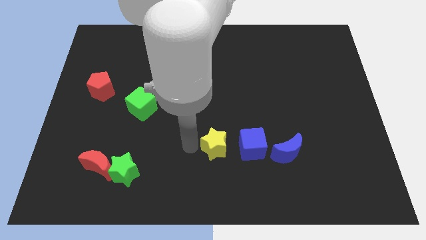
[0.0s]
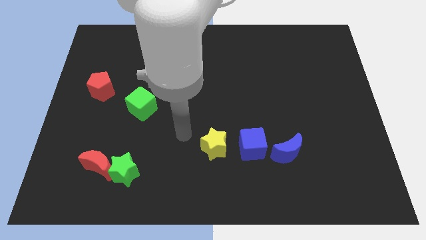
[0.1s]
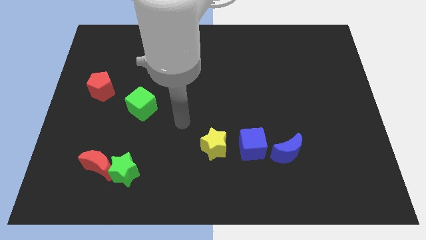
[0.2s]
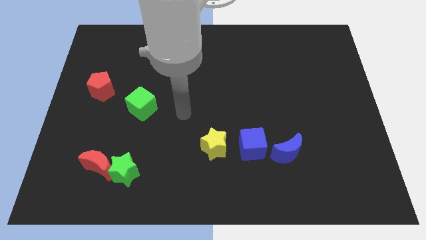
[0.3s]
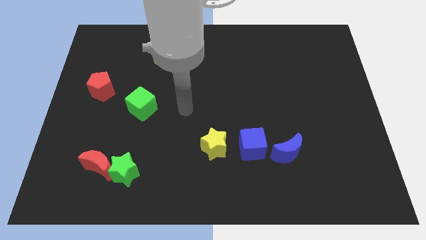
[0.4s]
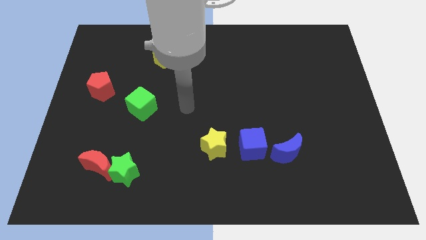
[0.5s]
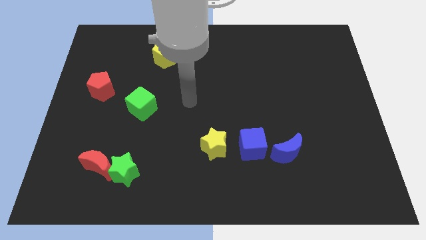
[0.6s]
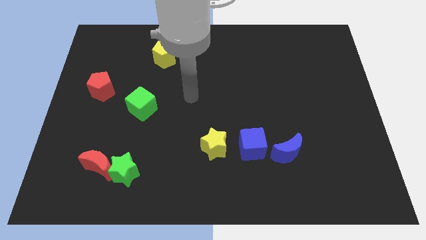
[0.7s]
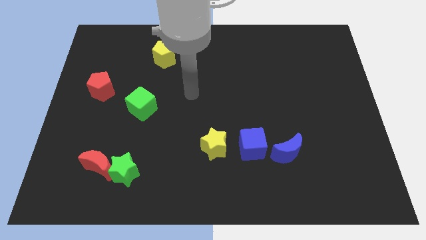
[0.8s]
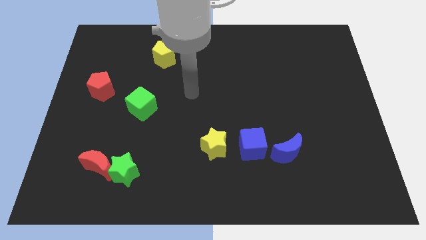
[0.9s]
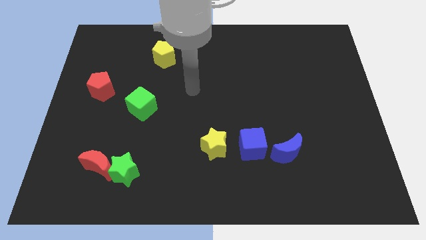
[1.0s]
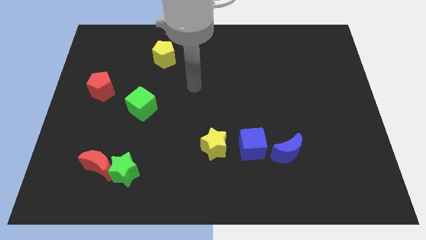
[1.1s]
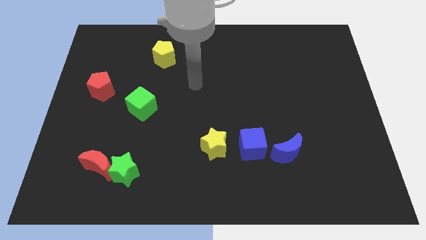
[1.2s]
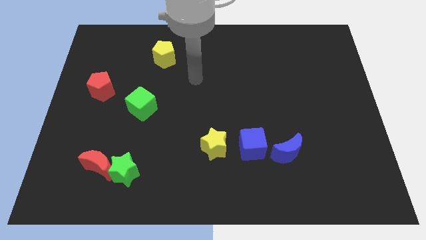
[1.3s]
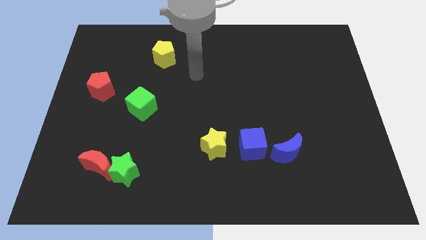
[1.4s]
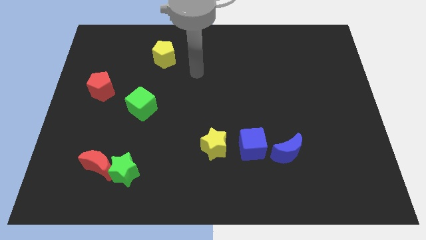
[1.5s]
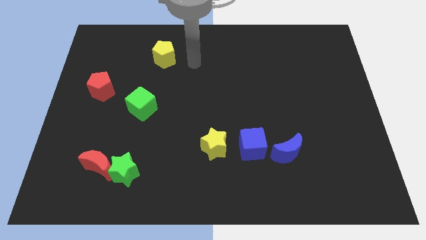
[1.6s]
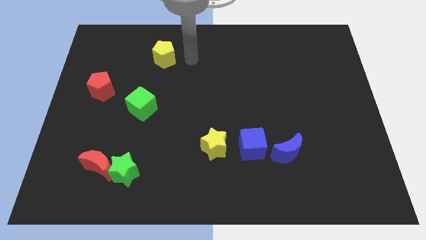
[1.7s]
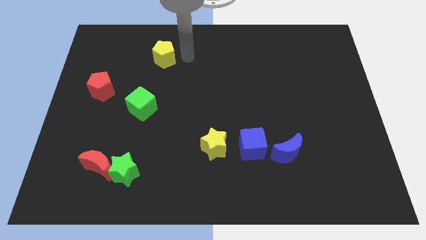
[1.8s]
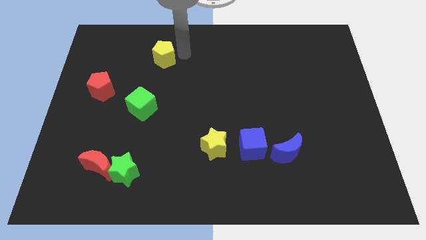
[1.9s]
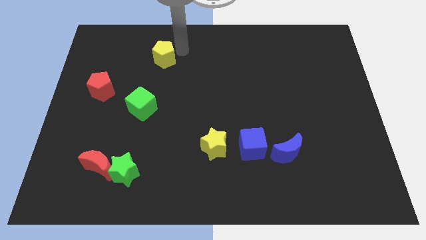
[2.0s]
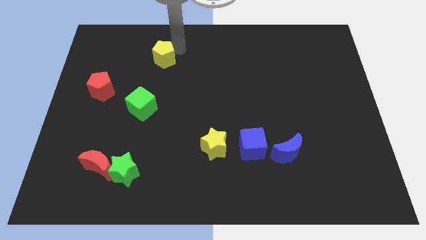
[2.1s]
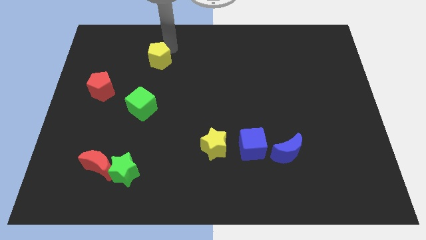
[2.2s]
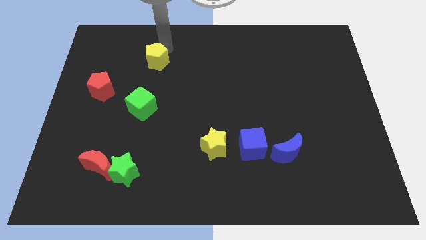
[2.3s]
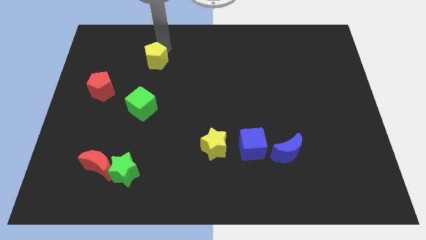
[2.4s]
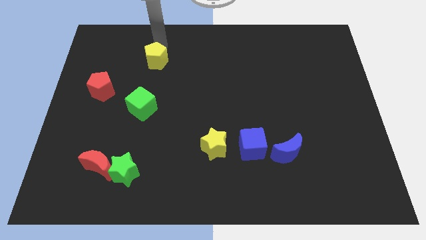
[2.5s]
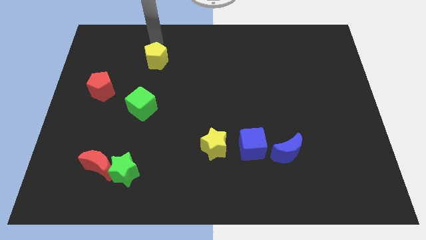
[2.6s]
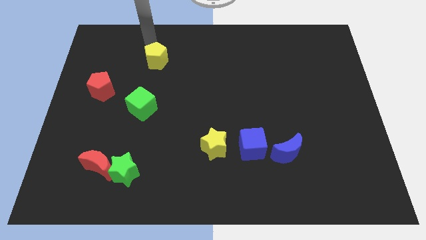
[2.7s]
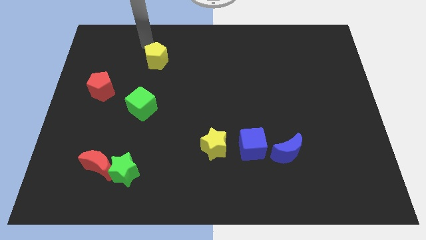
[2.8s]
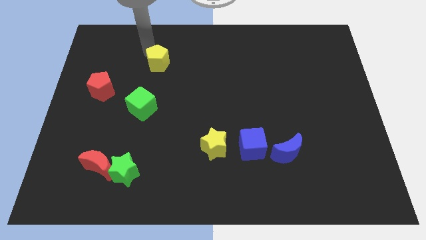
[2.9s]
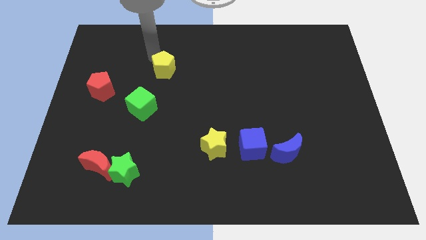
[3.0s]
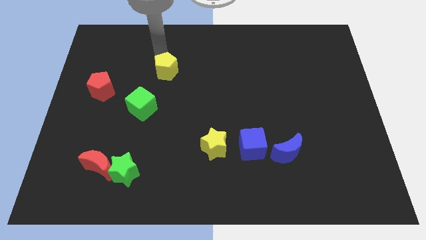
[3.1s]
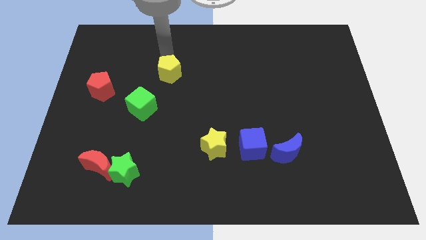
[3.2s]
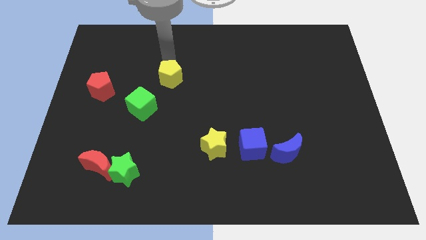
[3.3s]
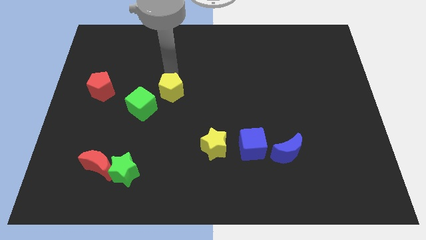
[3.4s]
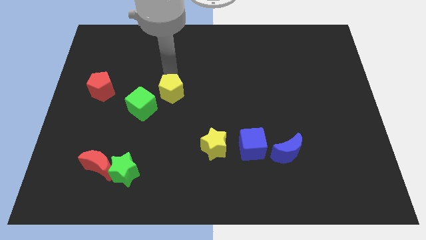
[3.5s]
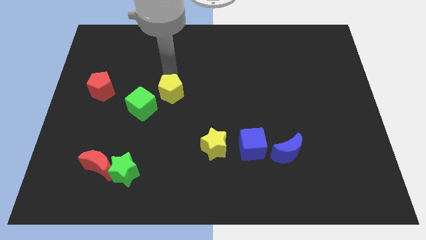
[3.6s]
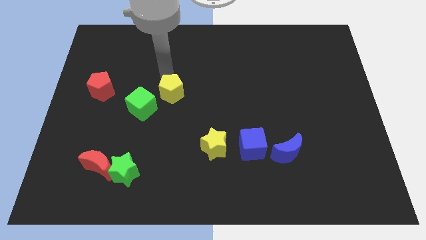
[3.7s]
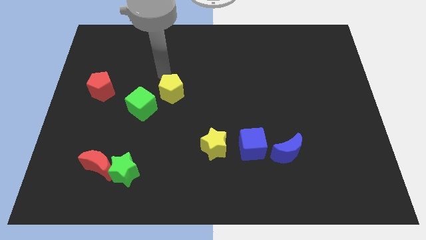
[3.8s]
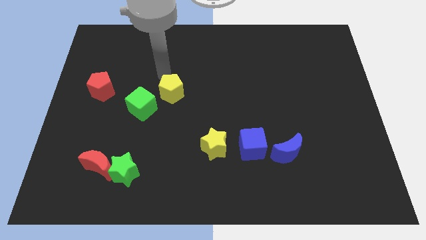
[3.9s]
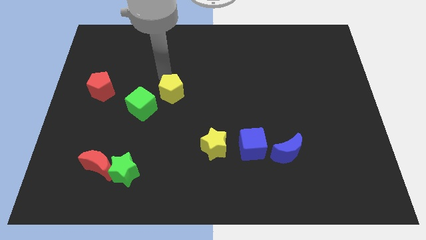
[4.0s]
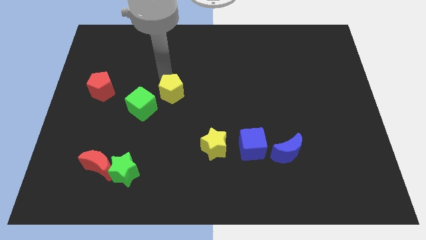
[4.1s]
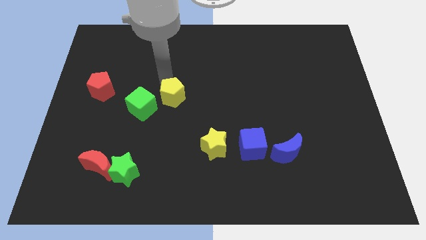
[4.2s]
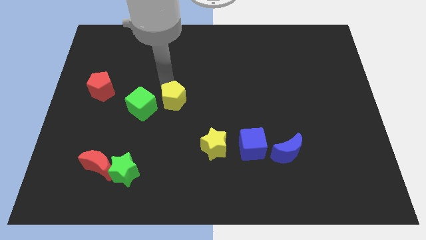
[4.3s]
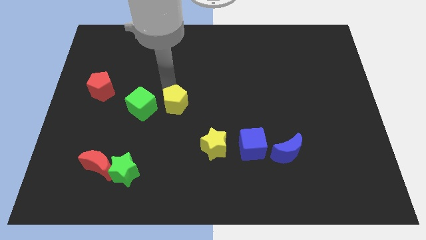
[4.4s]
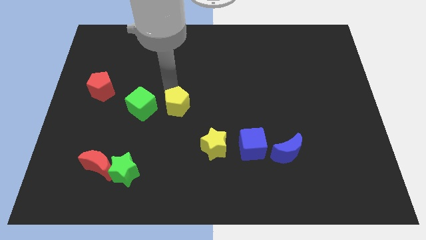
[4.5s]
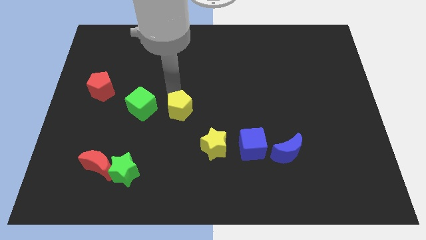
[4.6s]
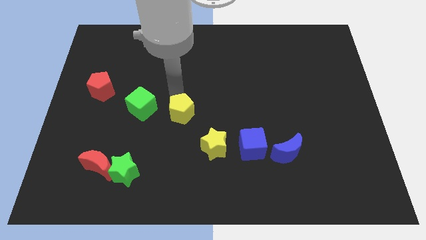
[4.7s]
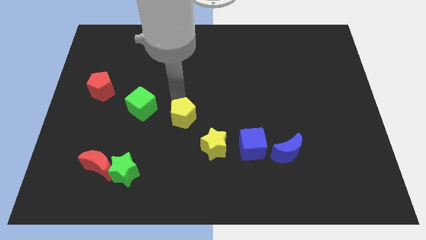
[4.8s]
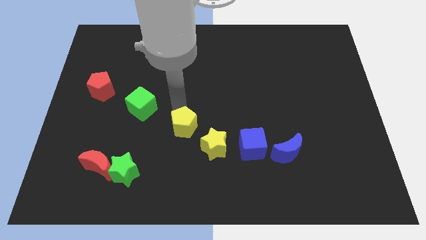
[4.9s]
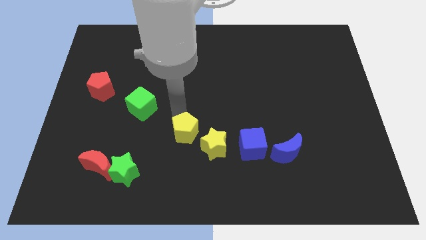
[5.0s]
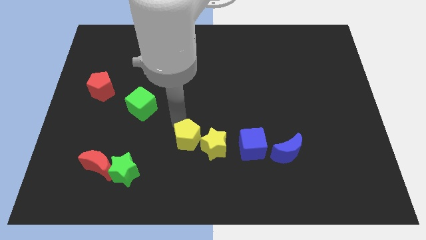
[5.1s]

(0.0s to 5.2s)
move the yellow pentagon towards the yellow star

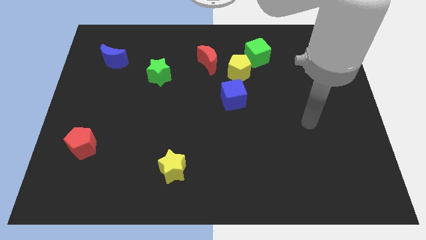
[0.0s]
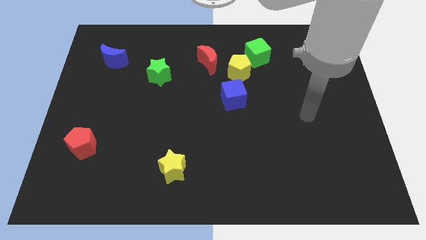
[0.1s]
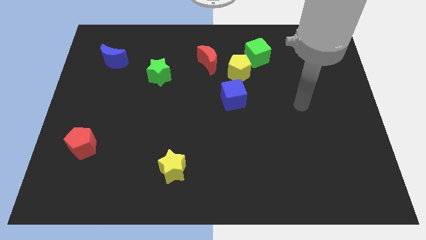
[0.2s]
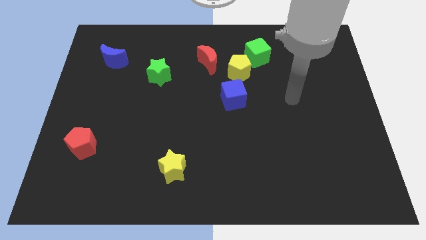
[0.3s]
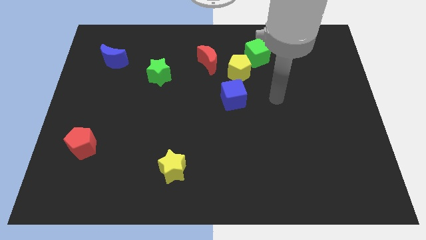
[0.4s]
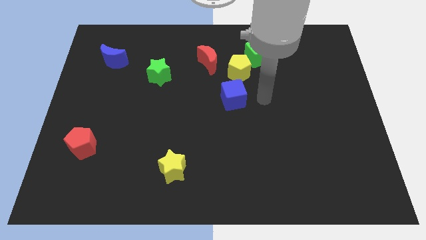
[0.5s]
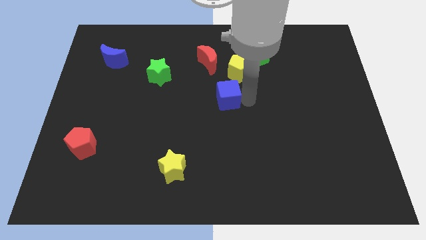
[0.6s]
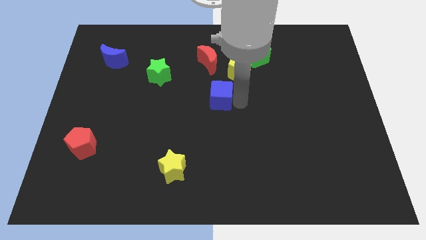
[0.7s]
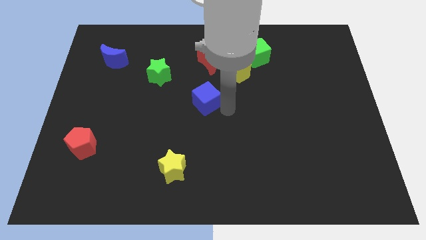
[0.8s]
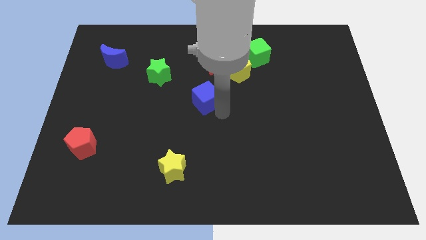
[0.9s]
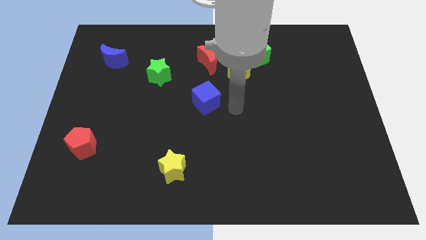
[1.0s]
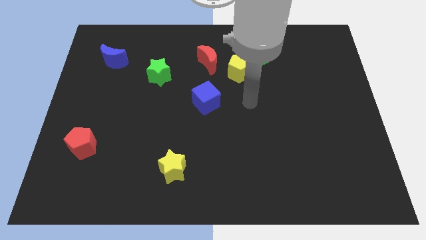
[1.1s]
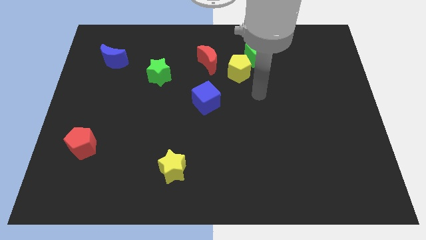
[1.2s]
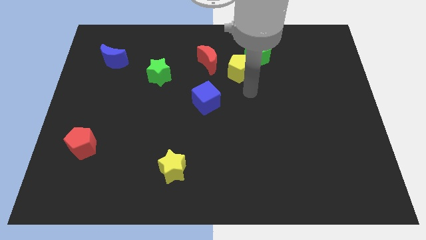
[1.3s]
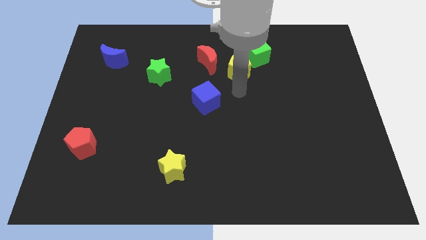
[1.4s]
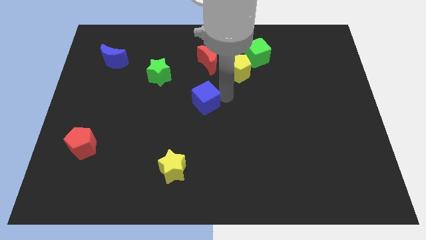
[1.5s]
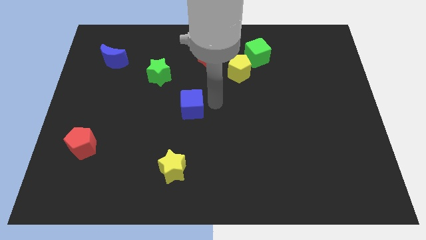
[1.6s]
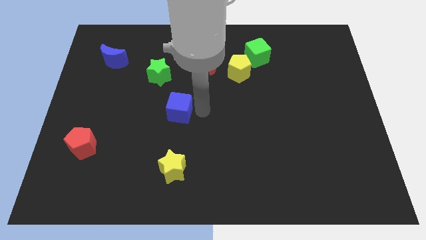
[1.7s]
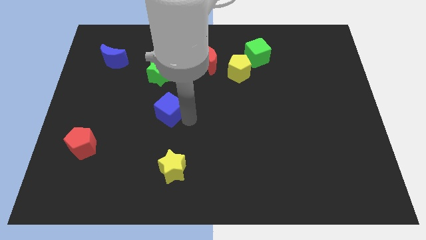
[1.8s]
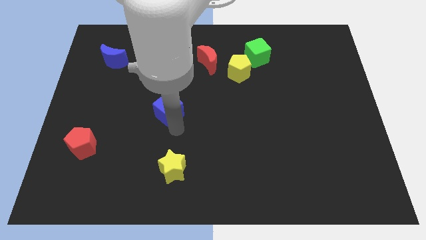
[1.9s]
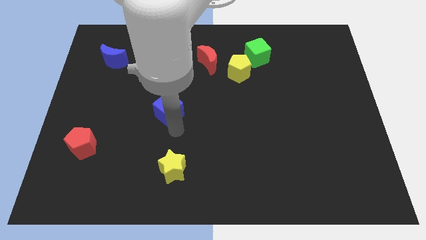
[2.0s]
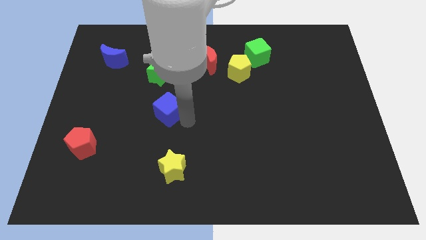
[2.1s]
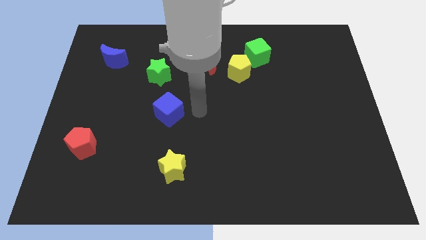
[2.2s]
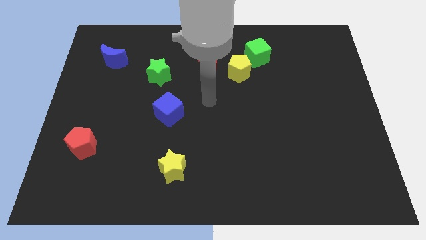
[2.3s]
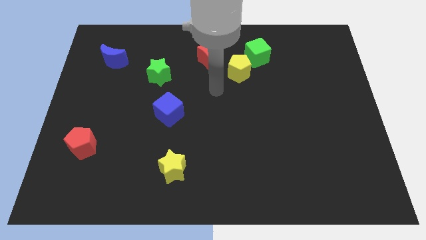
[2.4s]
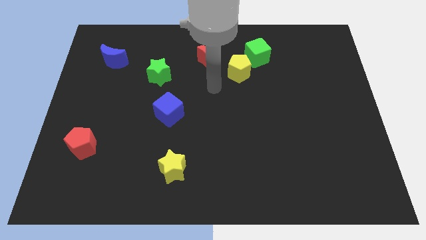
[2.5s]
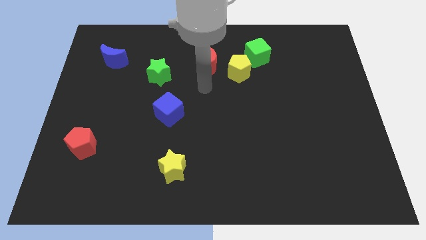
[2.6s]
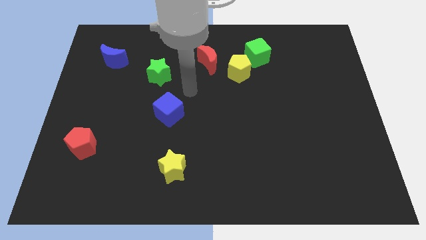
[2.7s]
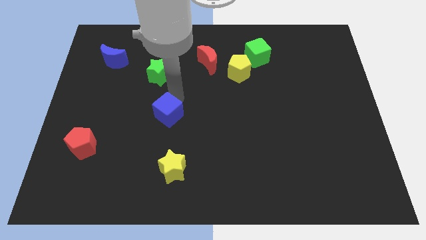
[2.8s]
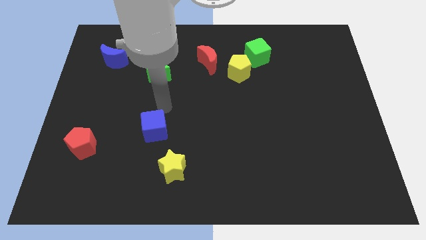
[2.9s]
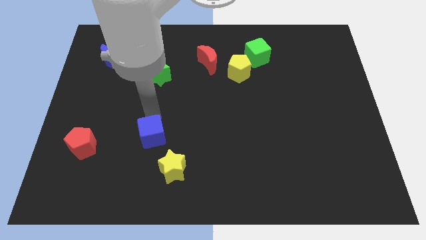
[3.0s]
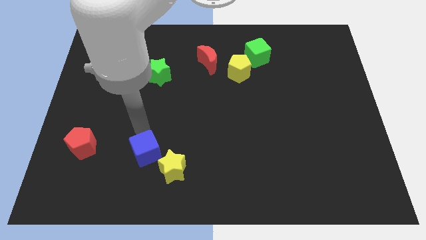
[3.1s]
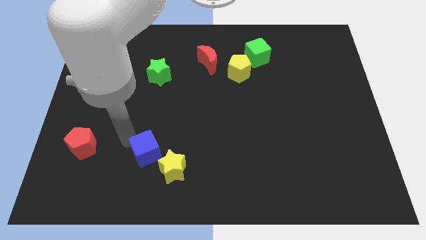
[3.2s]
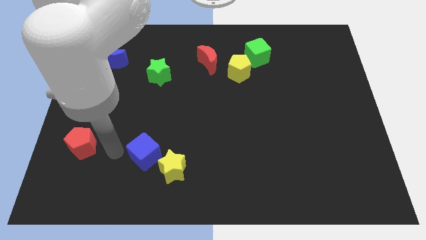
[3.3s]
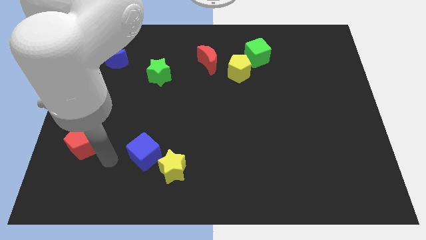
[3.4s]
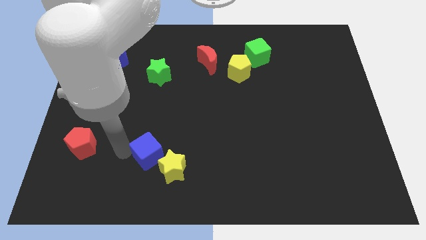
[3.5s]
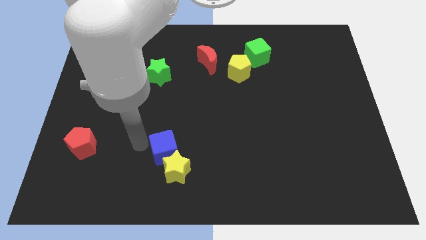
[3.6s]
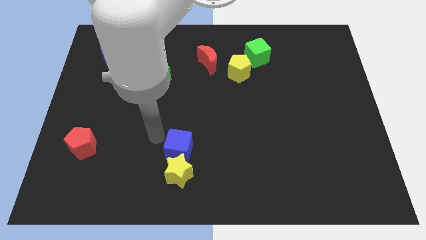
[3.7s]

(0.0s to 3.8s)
move the blue cube to the top left of the yellow star
